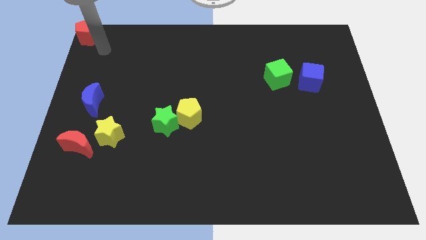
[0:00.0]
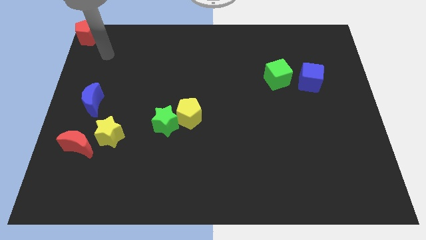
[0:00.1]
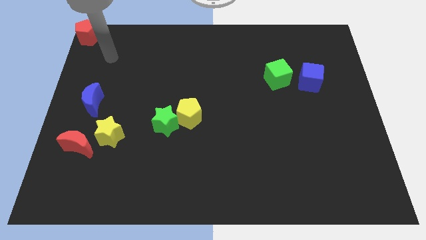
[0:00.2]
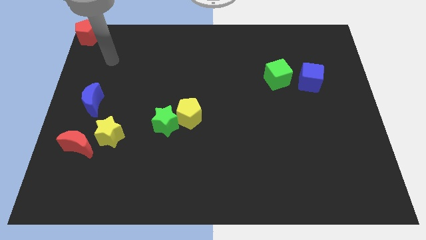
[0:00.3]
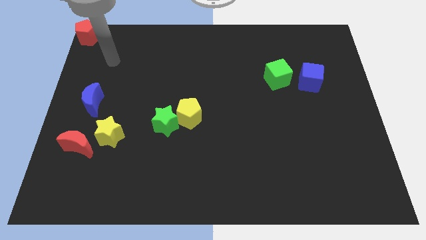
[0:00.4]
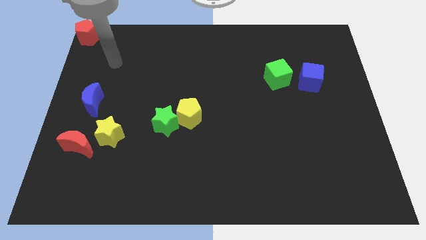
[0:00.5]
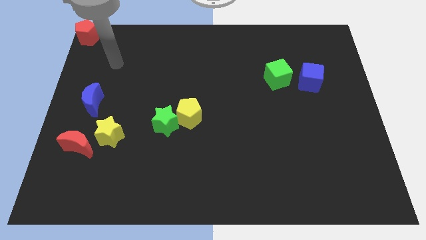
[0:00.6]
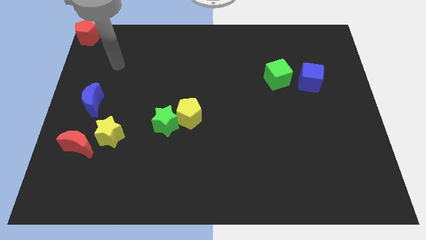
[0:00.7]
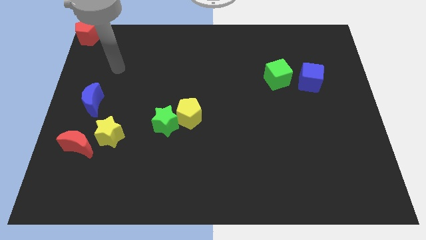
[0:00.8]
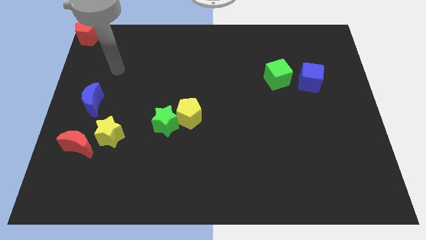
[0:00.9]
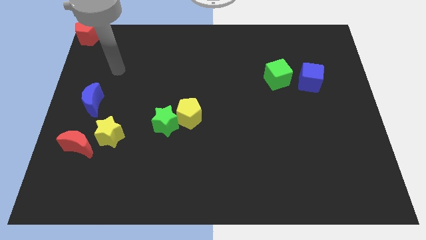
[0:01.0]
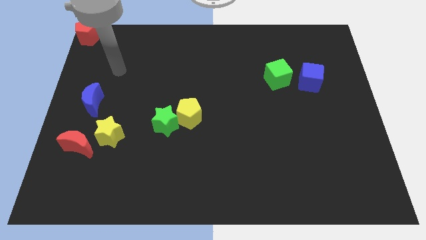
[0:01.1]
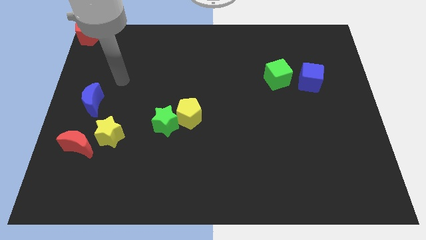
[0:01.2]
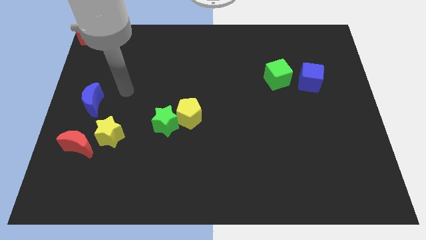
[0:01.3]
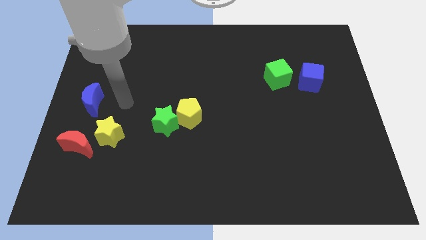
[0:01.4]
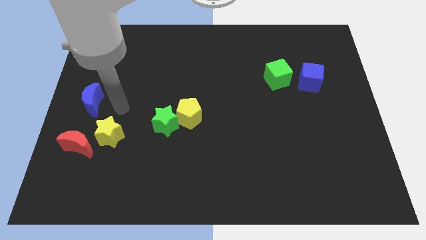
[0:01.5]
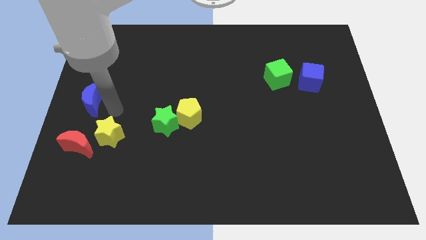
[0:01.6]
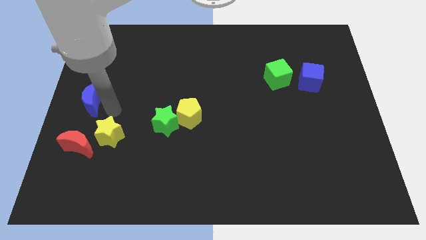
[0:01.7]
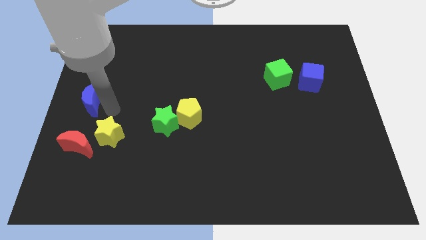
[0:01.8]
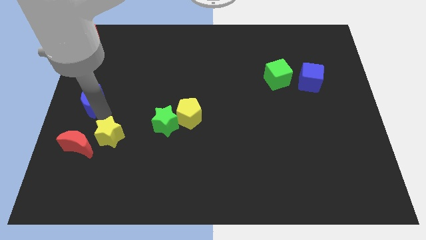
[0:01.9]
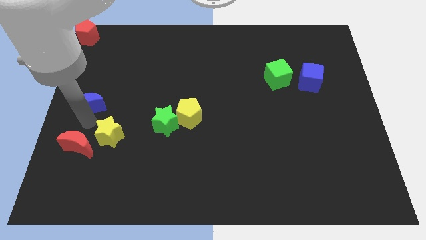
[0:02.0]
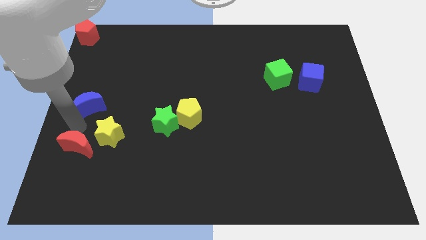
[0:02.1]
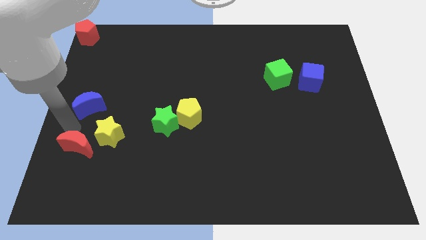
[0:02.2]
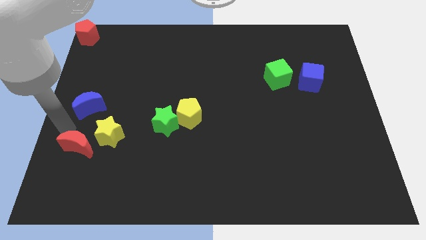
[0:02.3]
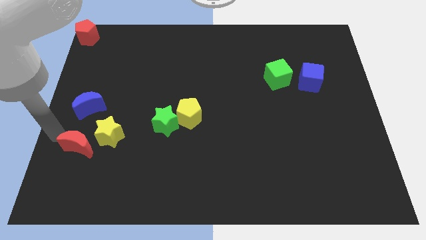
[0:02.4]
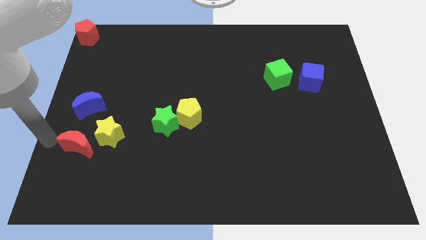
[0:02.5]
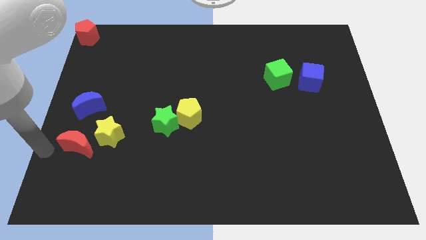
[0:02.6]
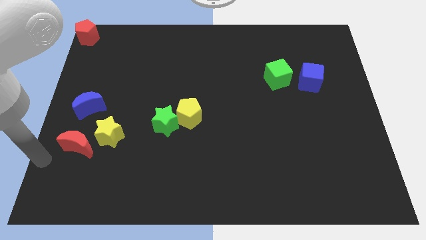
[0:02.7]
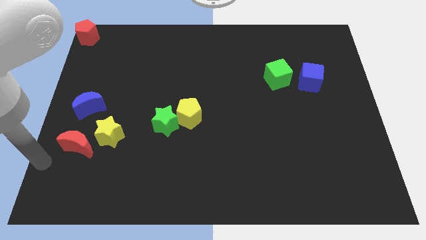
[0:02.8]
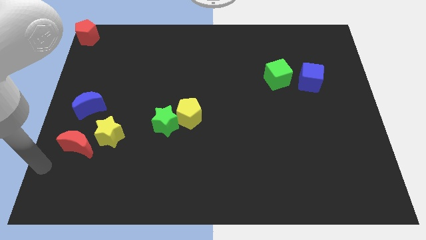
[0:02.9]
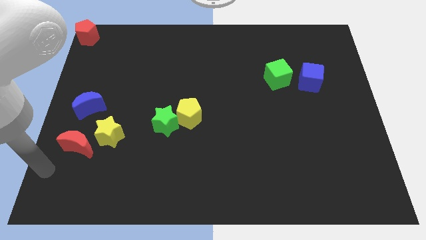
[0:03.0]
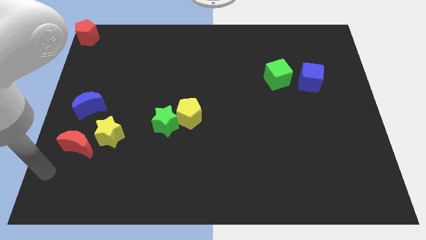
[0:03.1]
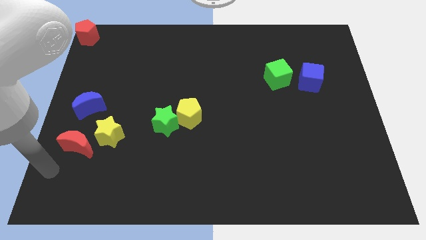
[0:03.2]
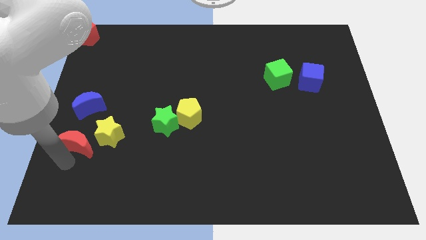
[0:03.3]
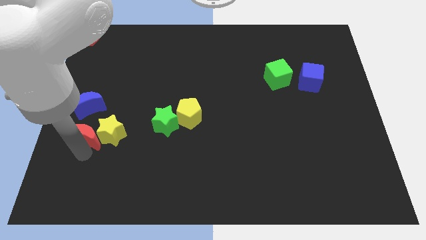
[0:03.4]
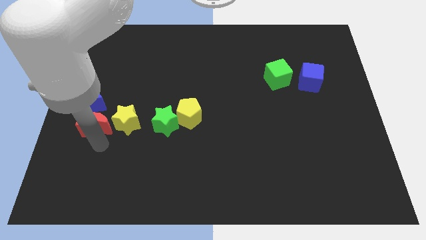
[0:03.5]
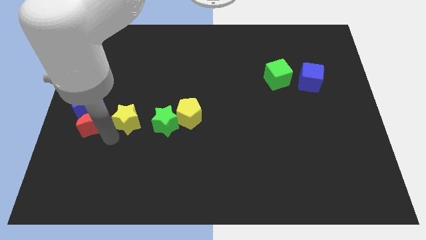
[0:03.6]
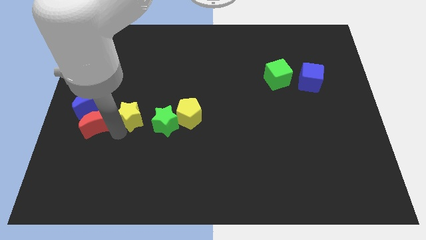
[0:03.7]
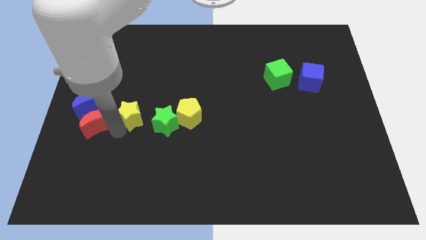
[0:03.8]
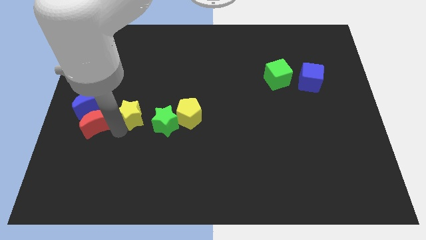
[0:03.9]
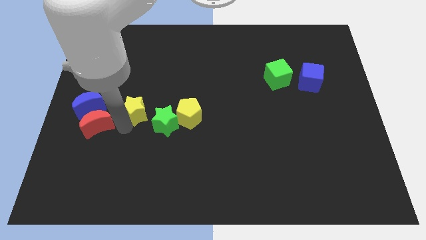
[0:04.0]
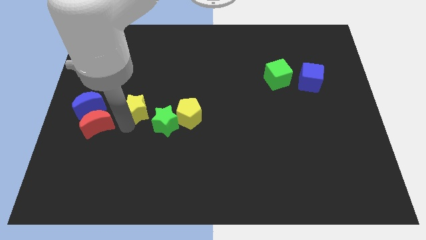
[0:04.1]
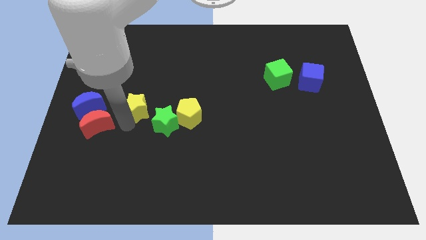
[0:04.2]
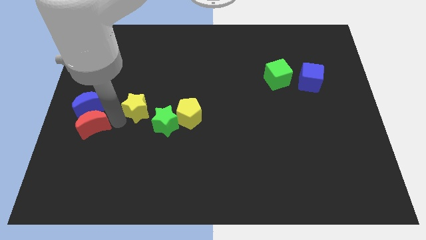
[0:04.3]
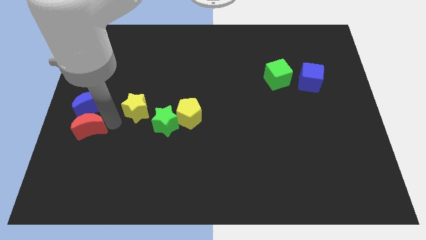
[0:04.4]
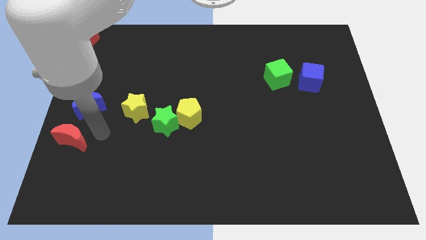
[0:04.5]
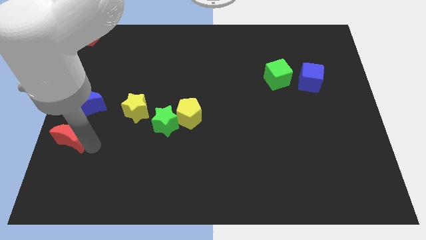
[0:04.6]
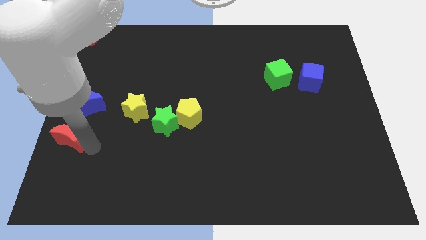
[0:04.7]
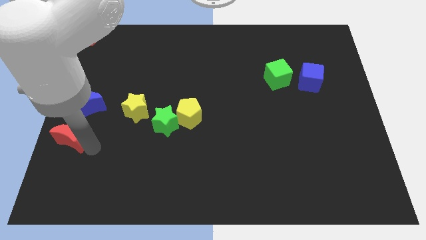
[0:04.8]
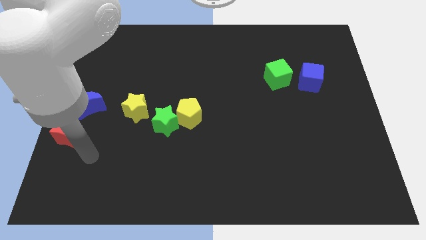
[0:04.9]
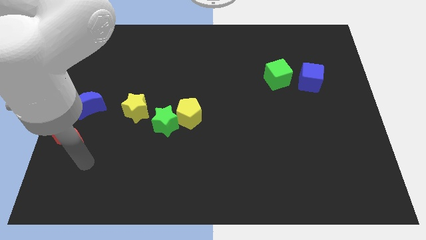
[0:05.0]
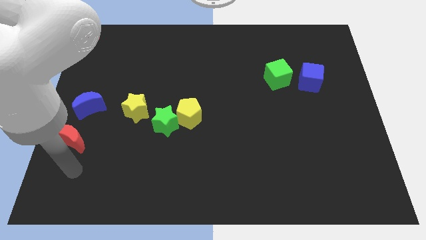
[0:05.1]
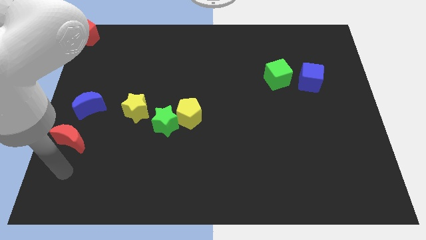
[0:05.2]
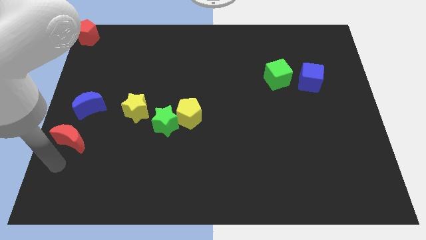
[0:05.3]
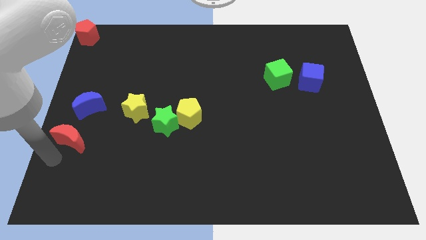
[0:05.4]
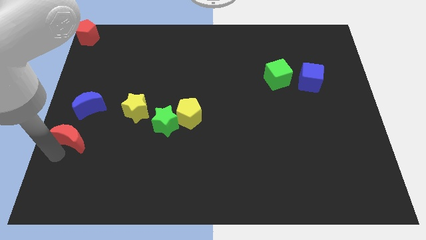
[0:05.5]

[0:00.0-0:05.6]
separate the red crescent and yellow star

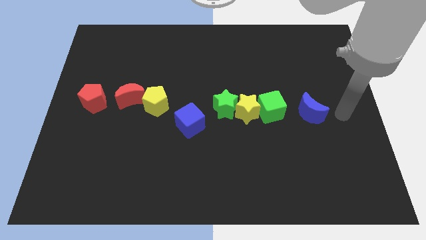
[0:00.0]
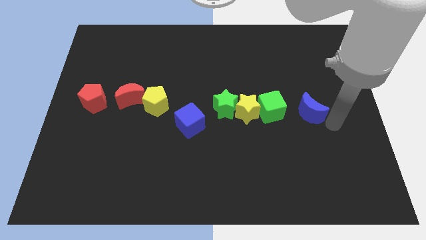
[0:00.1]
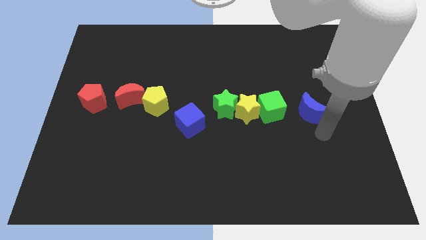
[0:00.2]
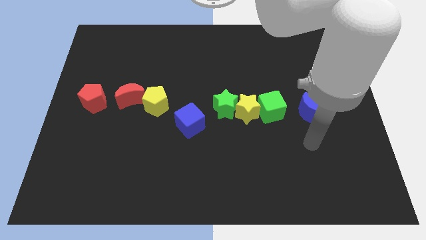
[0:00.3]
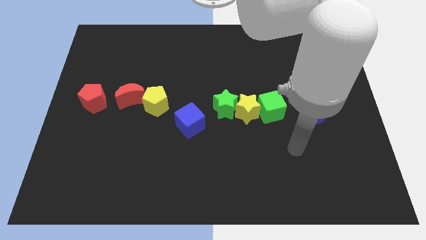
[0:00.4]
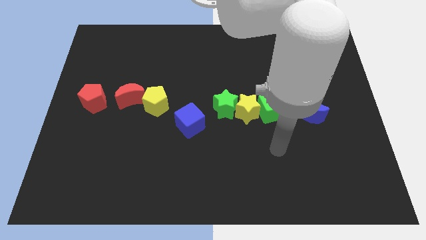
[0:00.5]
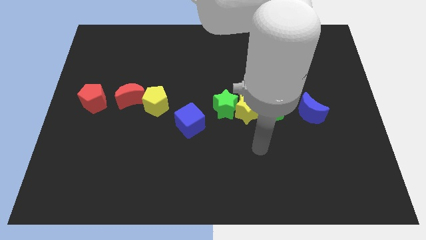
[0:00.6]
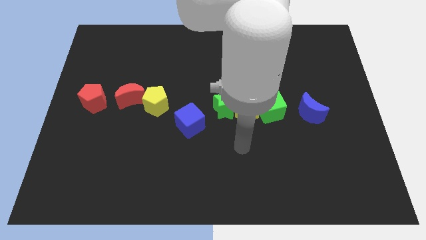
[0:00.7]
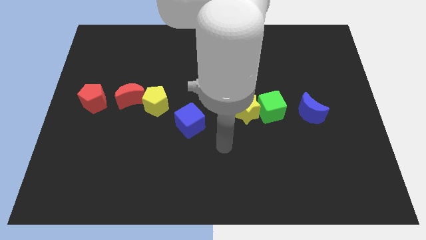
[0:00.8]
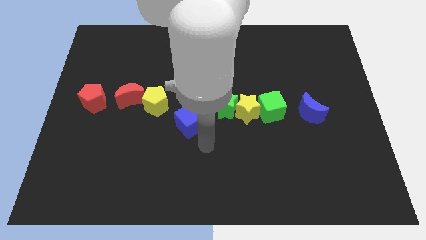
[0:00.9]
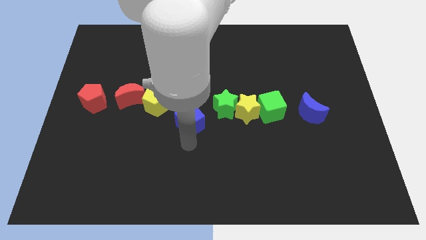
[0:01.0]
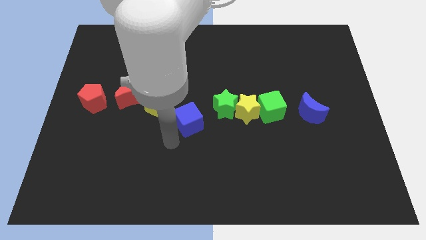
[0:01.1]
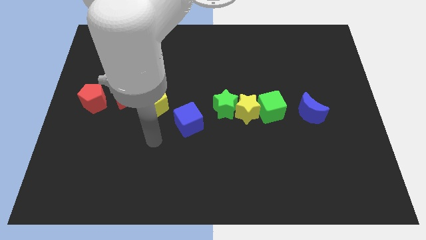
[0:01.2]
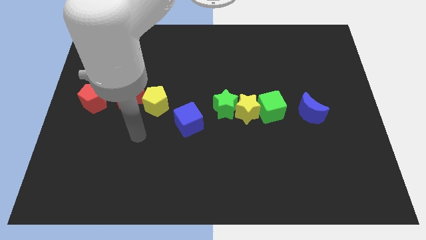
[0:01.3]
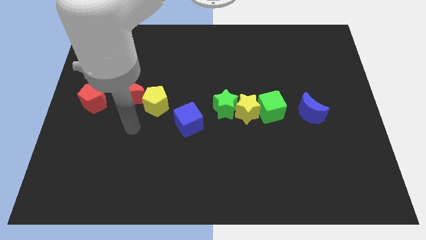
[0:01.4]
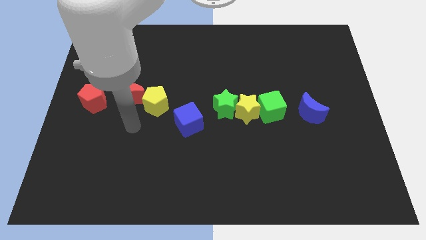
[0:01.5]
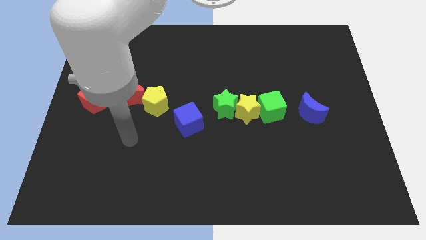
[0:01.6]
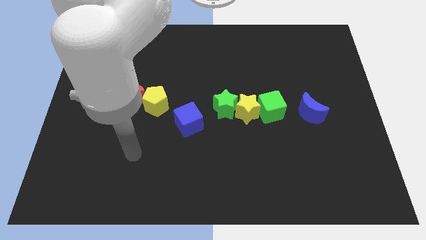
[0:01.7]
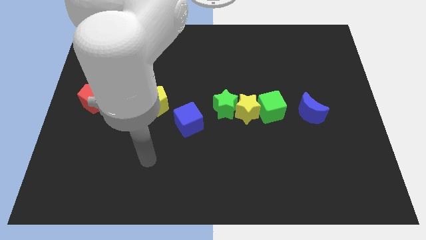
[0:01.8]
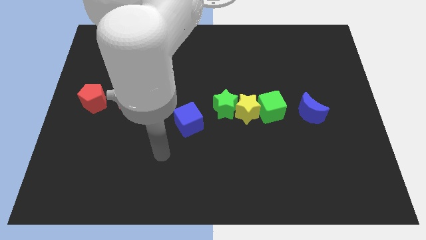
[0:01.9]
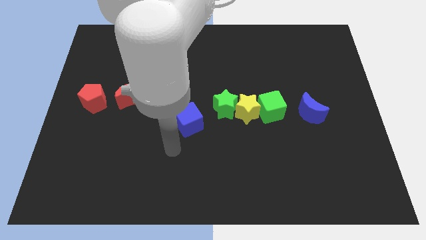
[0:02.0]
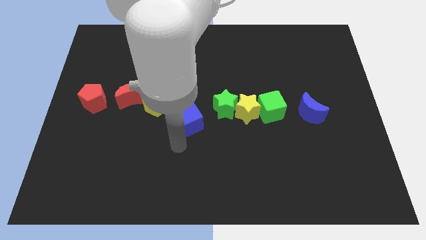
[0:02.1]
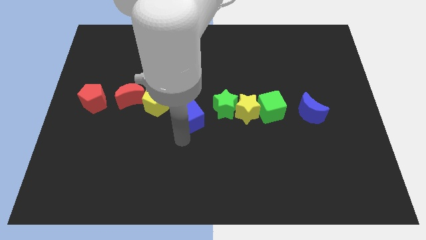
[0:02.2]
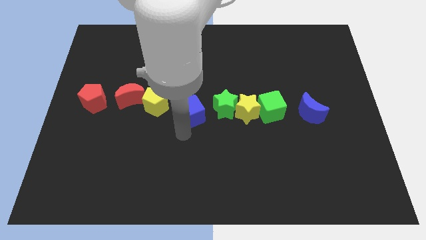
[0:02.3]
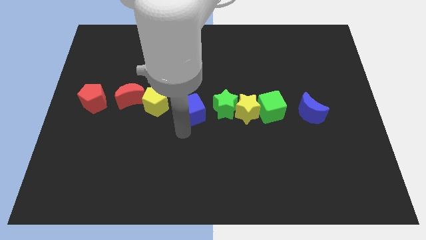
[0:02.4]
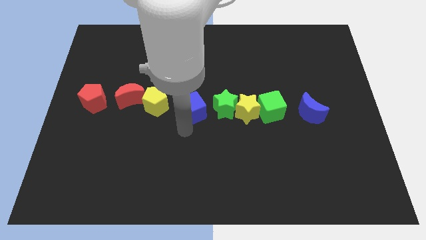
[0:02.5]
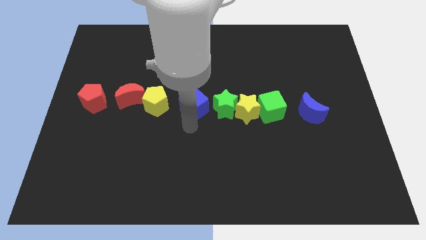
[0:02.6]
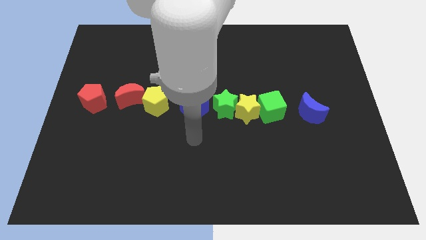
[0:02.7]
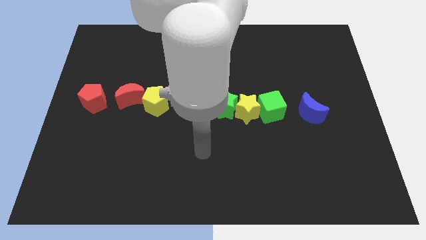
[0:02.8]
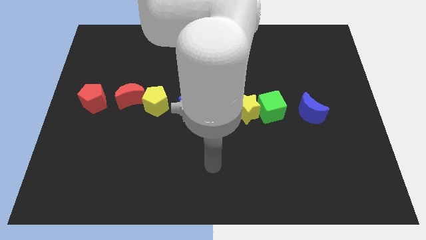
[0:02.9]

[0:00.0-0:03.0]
place the blue cube at the center of the board

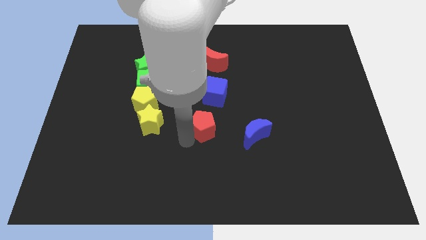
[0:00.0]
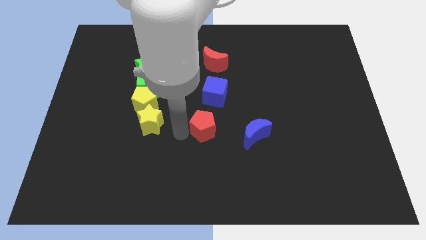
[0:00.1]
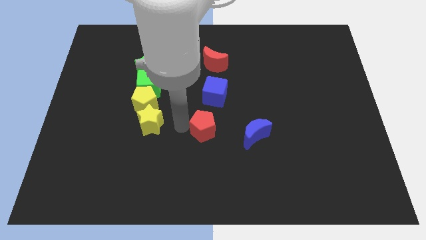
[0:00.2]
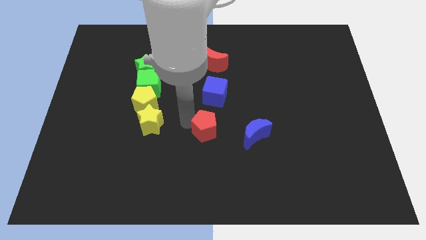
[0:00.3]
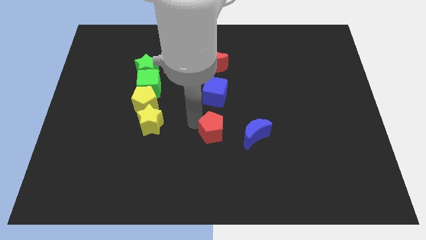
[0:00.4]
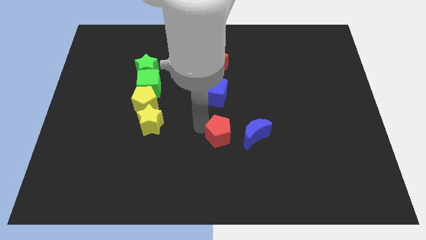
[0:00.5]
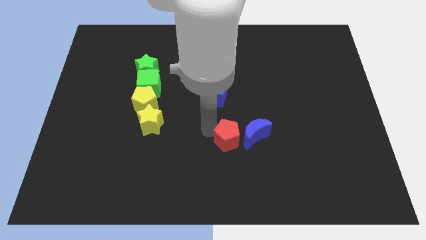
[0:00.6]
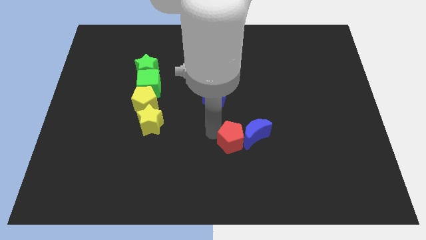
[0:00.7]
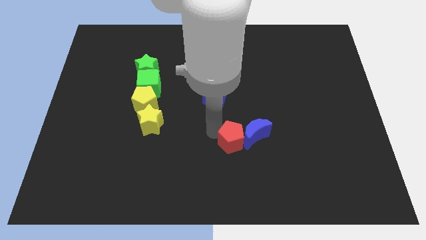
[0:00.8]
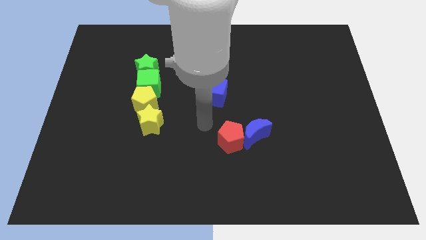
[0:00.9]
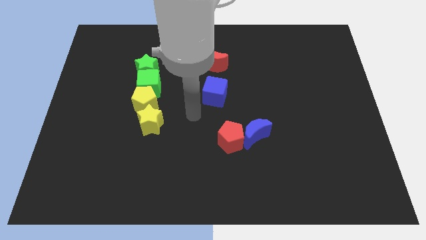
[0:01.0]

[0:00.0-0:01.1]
move the red pentagon to the left of the blue crescent
